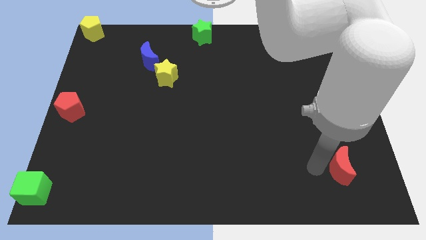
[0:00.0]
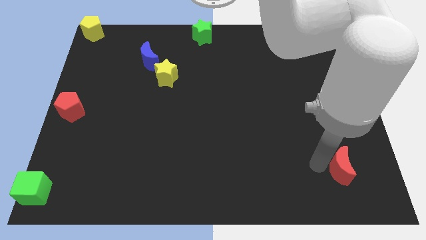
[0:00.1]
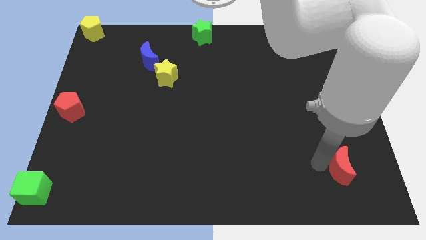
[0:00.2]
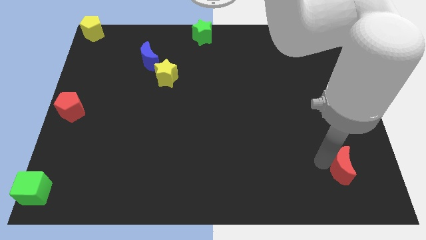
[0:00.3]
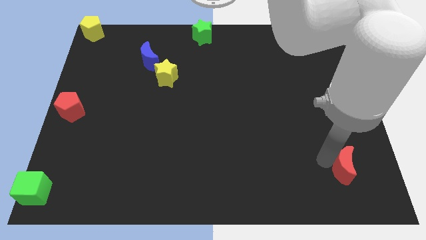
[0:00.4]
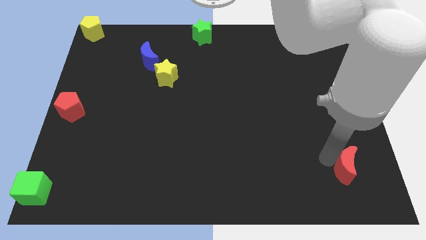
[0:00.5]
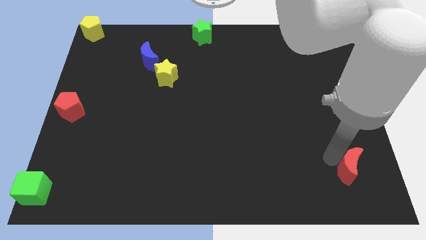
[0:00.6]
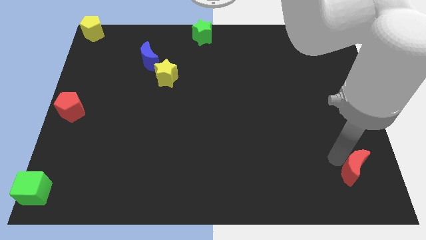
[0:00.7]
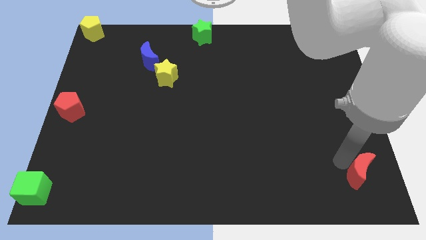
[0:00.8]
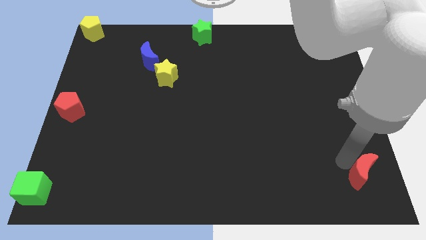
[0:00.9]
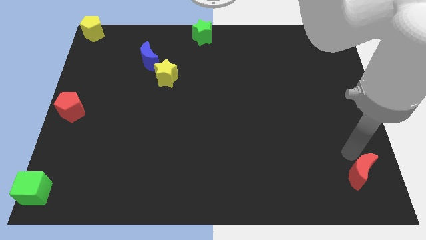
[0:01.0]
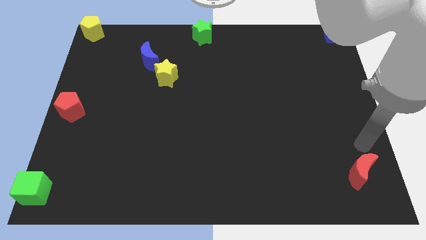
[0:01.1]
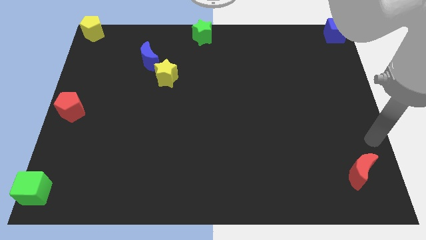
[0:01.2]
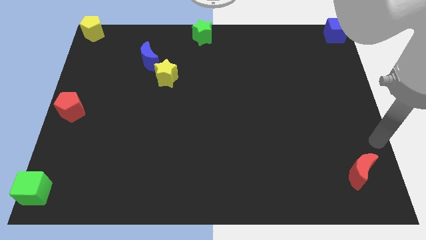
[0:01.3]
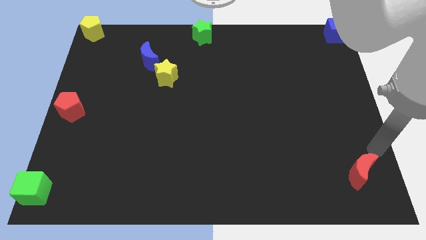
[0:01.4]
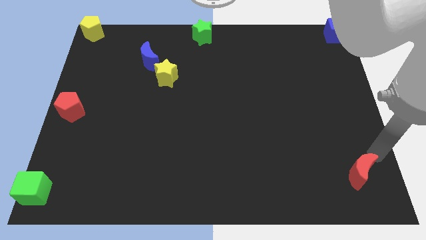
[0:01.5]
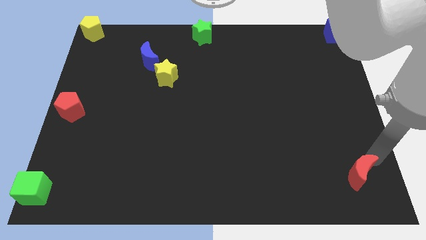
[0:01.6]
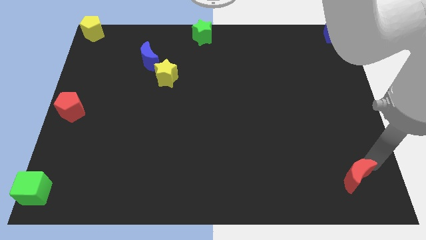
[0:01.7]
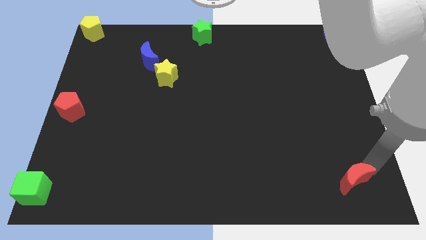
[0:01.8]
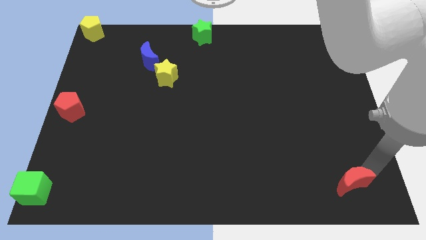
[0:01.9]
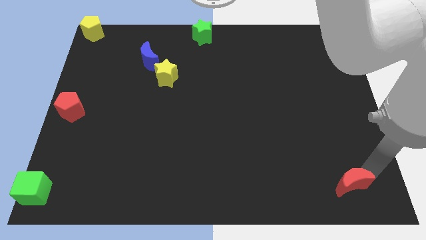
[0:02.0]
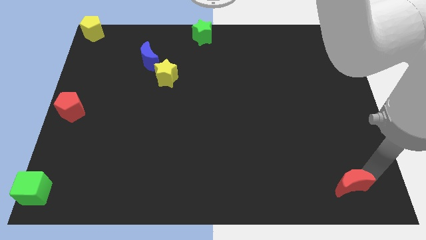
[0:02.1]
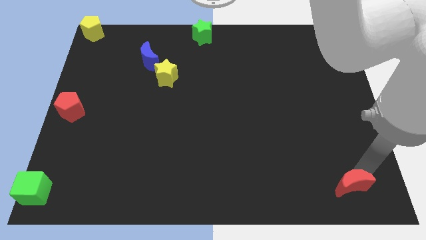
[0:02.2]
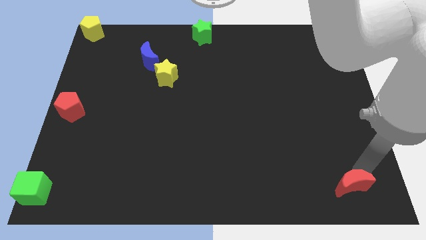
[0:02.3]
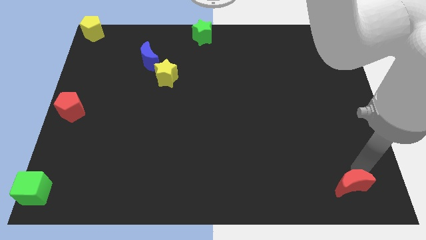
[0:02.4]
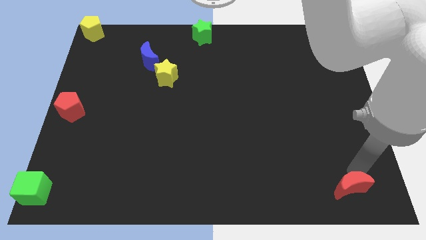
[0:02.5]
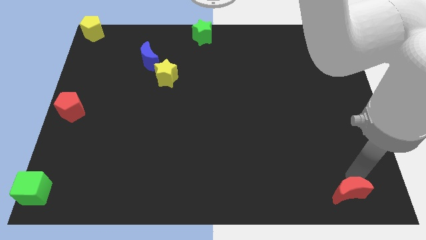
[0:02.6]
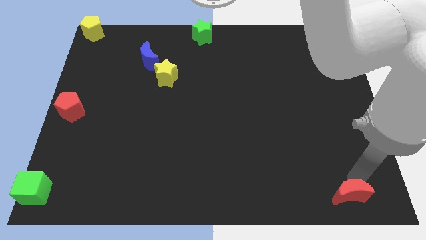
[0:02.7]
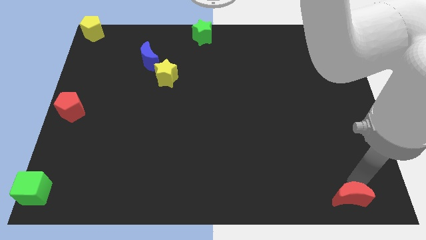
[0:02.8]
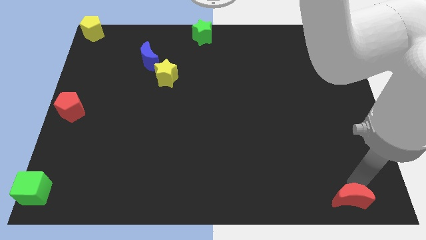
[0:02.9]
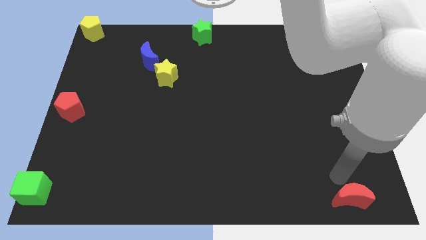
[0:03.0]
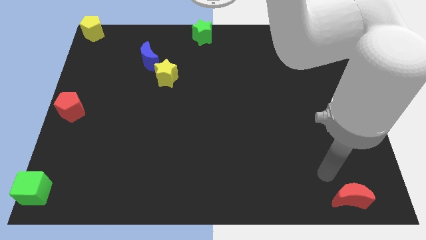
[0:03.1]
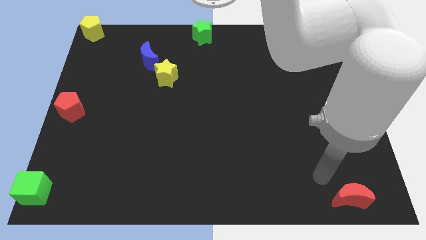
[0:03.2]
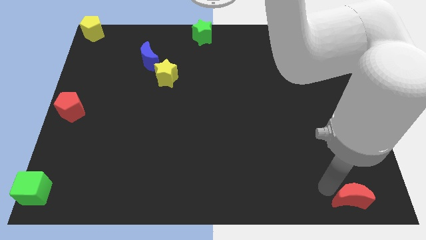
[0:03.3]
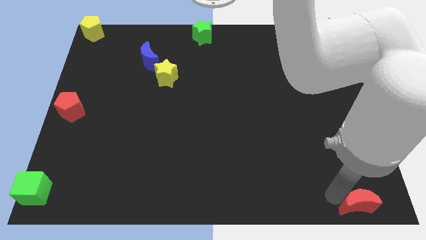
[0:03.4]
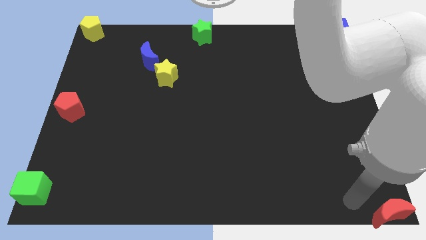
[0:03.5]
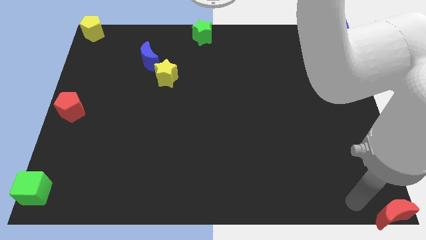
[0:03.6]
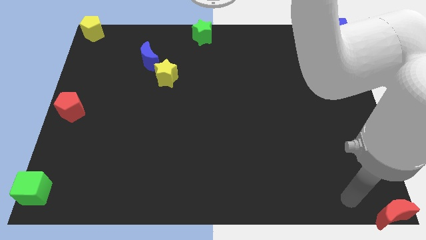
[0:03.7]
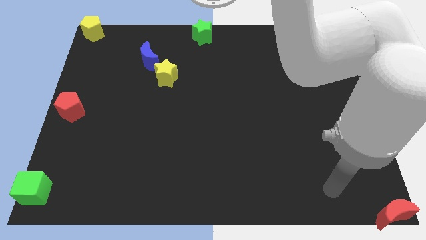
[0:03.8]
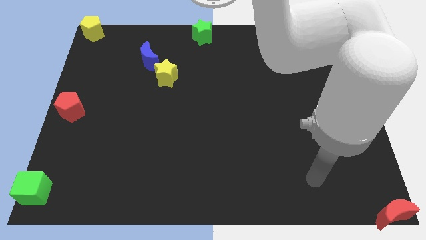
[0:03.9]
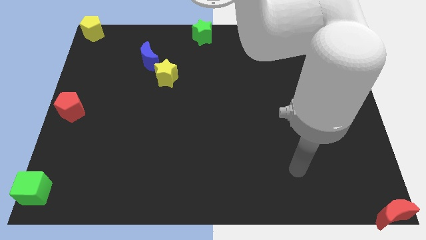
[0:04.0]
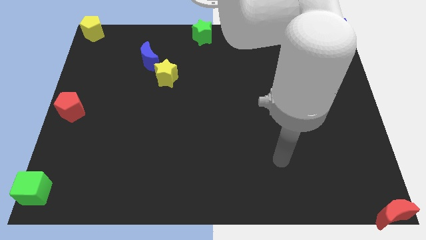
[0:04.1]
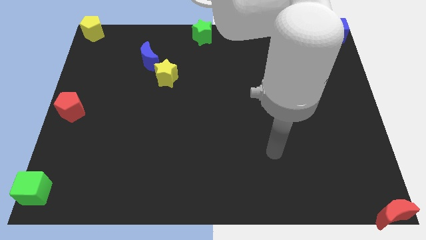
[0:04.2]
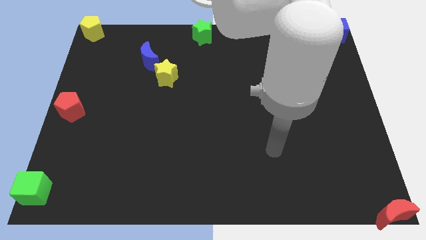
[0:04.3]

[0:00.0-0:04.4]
push the red crescent to the bottom right corner of the board

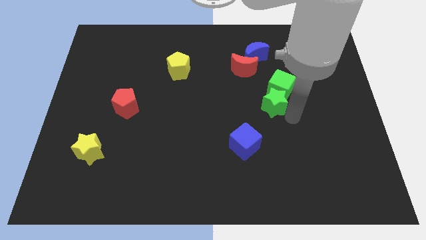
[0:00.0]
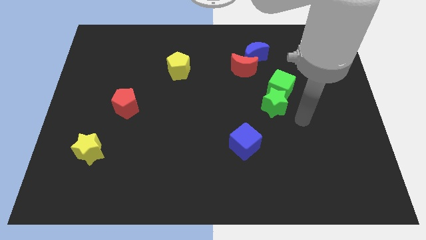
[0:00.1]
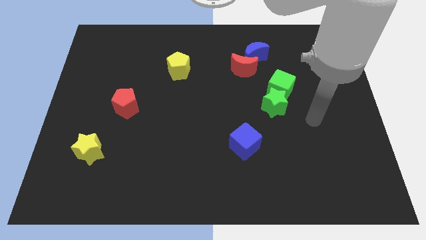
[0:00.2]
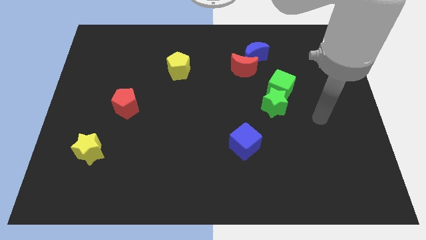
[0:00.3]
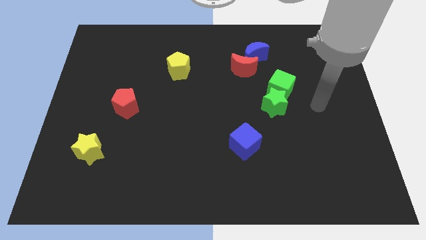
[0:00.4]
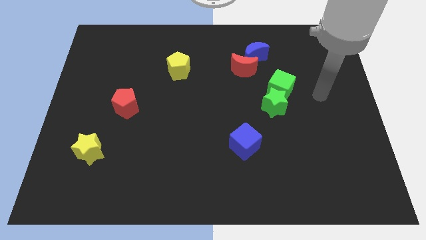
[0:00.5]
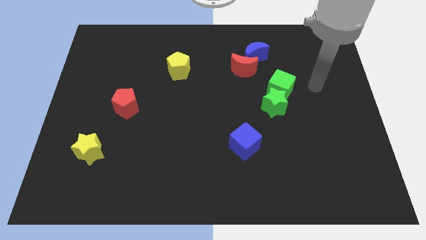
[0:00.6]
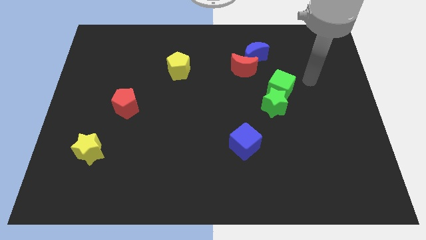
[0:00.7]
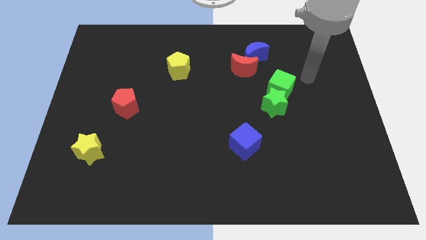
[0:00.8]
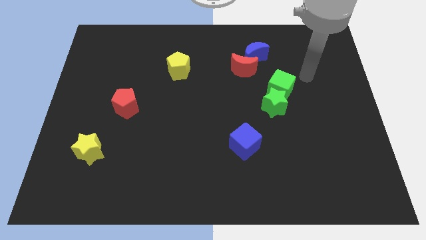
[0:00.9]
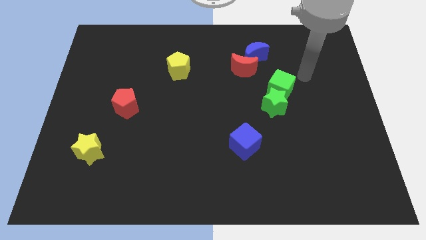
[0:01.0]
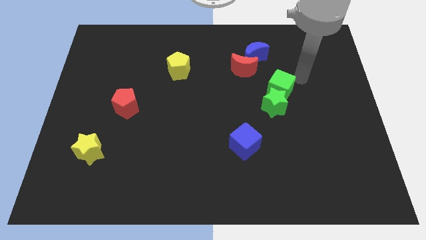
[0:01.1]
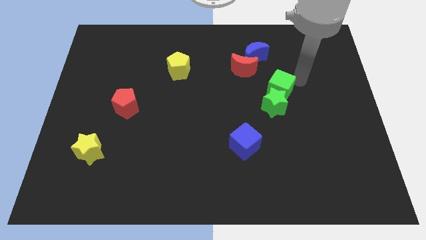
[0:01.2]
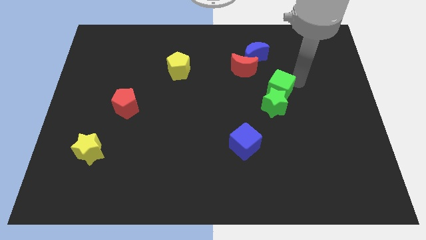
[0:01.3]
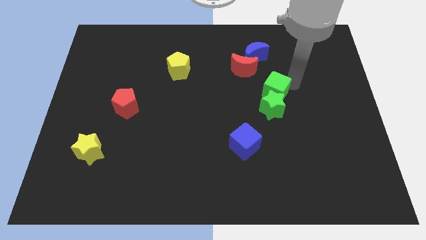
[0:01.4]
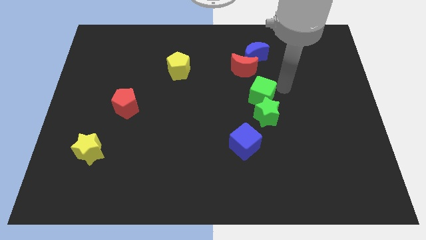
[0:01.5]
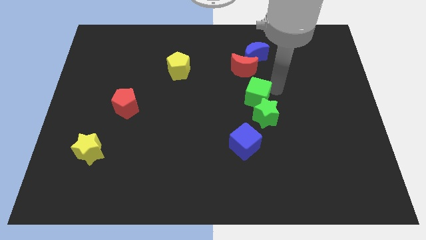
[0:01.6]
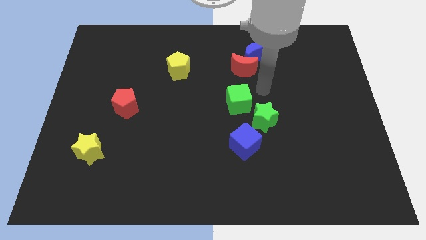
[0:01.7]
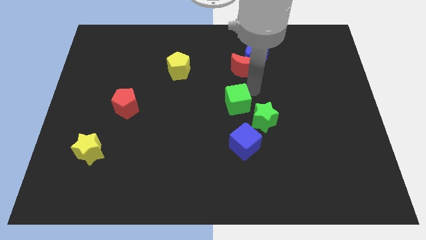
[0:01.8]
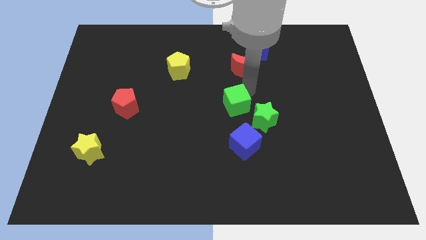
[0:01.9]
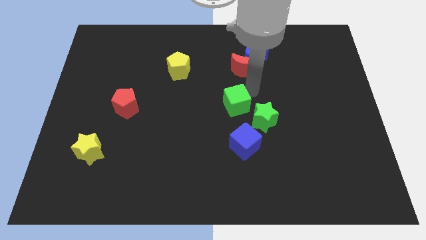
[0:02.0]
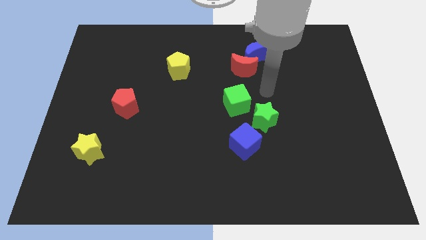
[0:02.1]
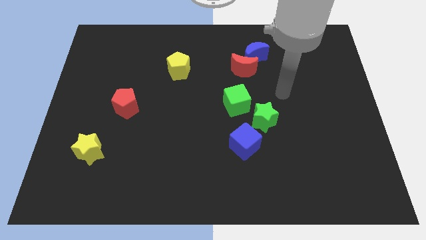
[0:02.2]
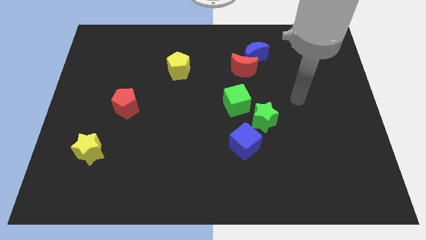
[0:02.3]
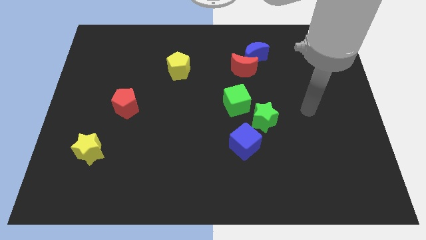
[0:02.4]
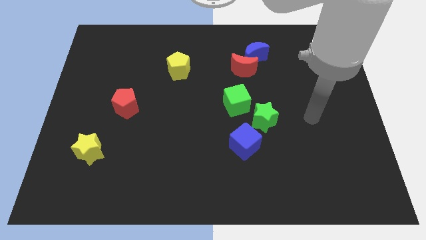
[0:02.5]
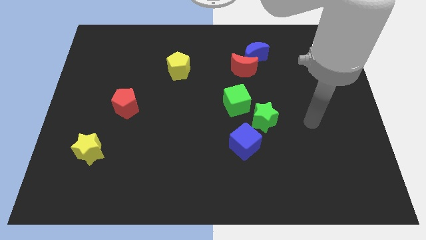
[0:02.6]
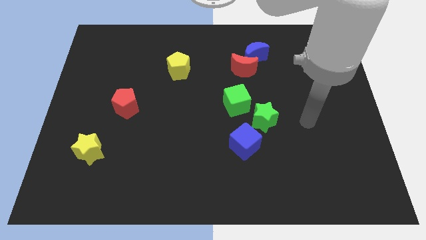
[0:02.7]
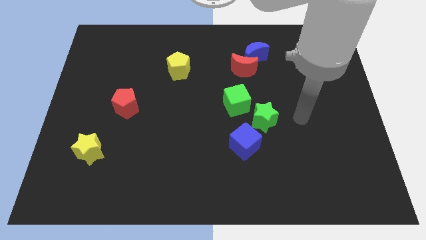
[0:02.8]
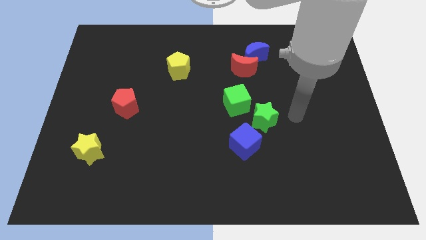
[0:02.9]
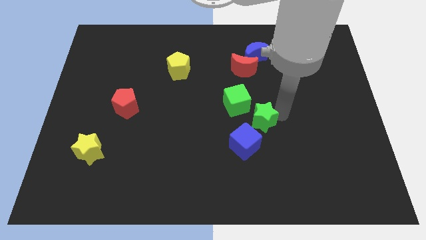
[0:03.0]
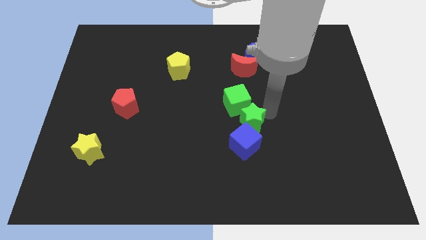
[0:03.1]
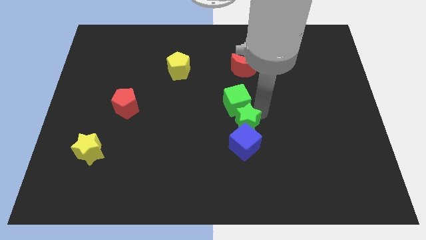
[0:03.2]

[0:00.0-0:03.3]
place the green blocks in between the red moon and blue cube
